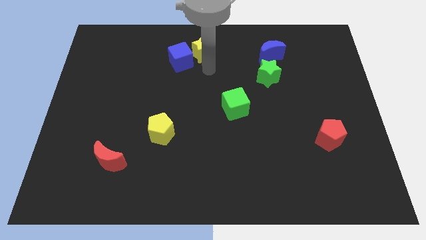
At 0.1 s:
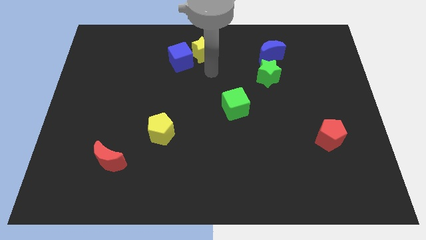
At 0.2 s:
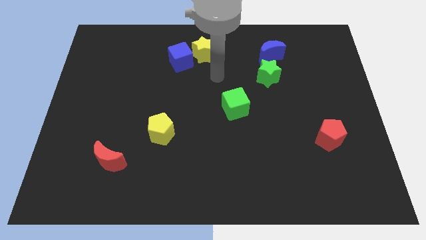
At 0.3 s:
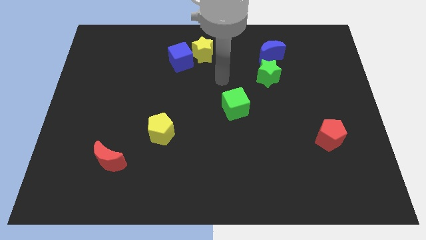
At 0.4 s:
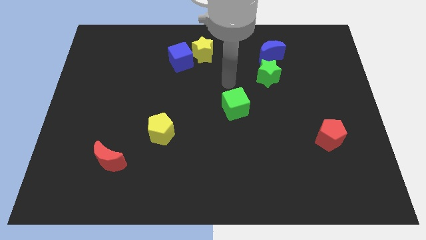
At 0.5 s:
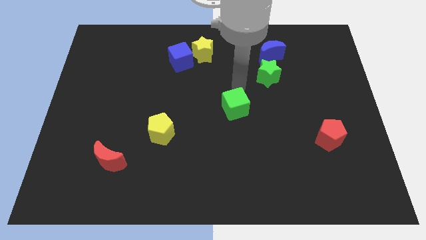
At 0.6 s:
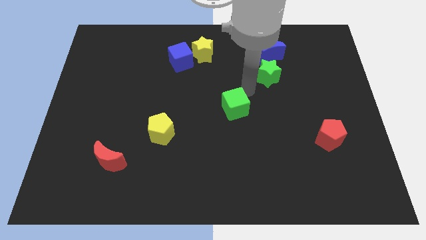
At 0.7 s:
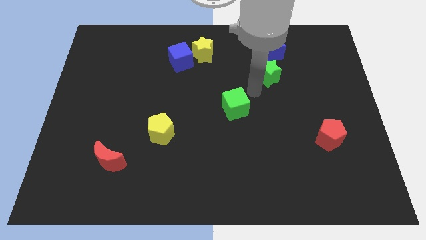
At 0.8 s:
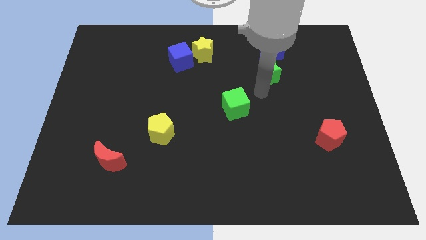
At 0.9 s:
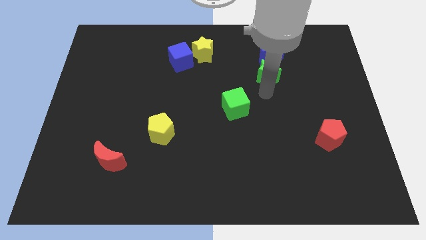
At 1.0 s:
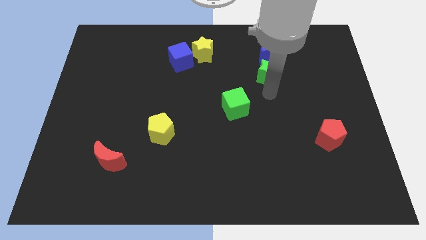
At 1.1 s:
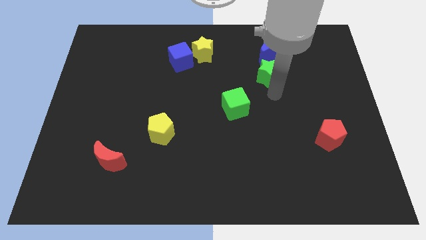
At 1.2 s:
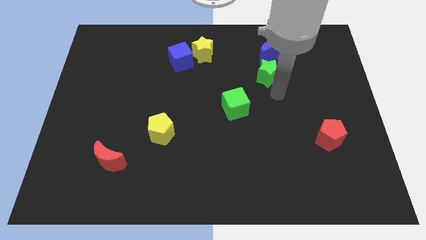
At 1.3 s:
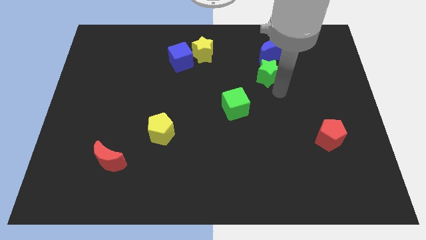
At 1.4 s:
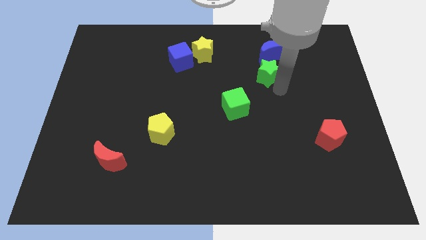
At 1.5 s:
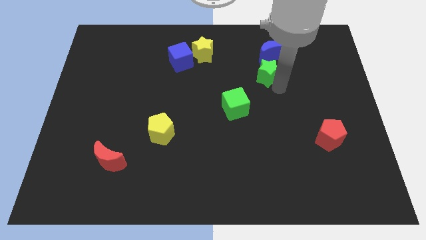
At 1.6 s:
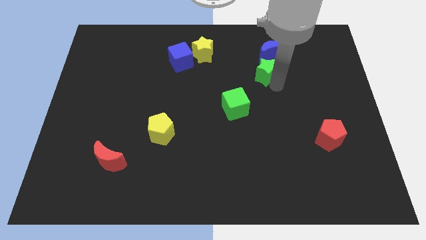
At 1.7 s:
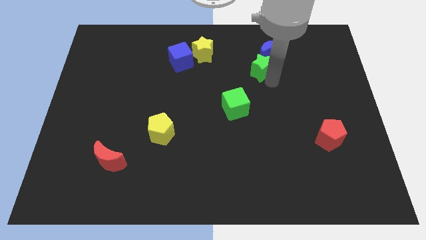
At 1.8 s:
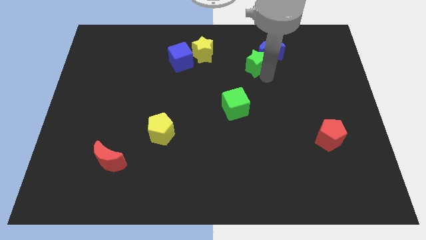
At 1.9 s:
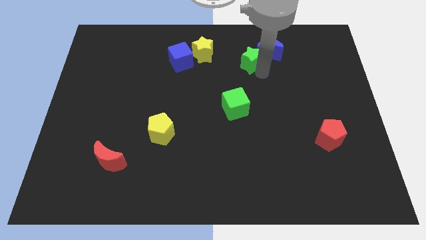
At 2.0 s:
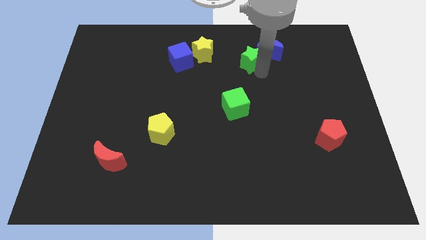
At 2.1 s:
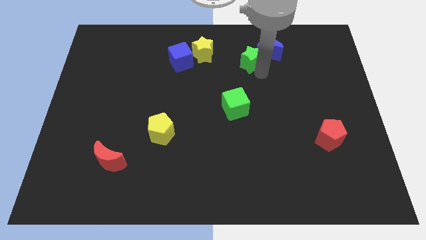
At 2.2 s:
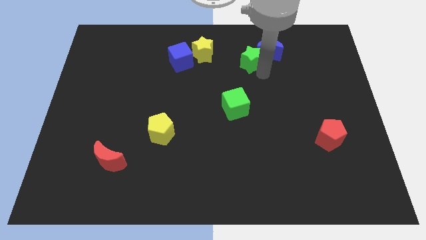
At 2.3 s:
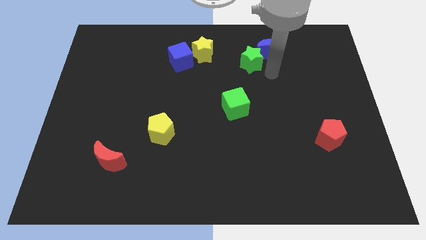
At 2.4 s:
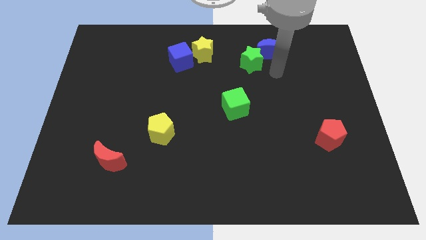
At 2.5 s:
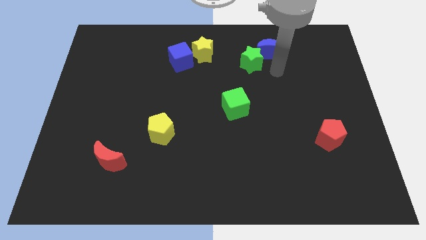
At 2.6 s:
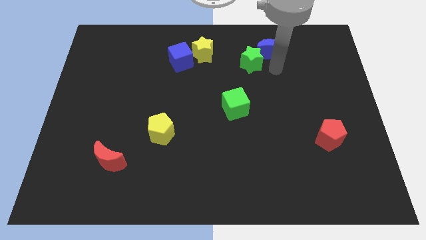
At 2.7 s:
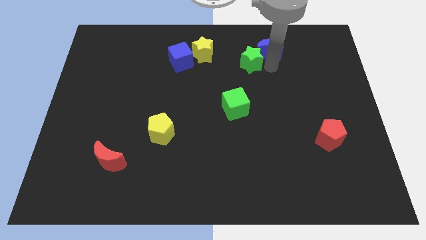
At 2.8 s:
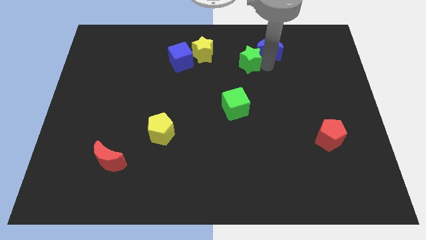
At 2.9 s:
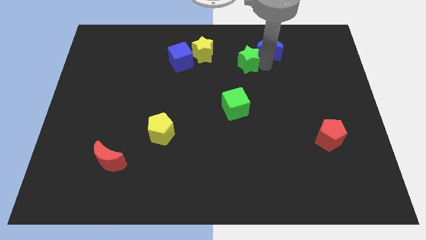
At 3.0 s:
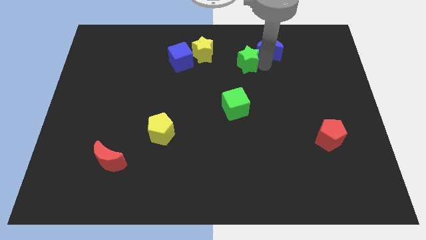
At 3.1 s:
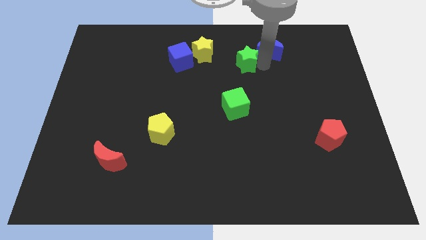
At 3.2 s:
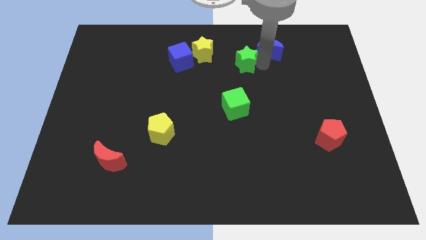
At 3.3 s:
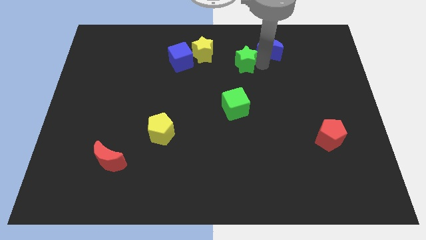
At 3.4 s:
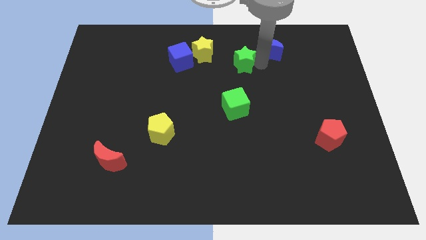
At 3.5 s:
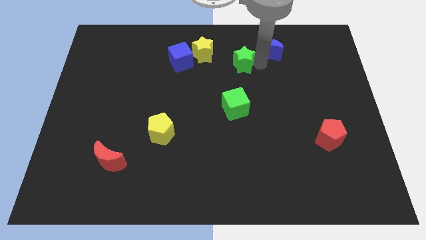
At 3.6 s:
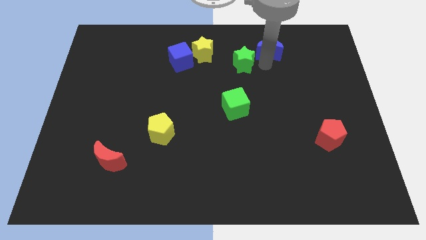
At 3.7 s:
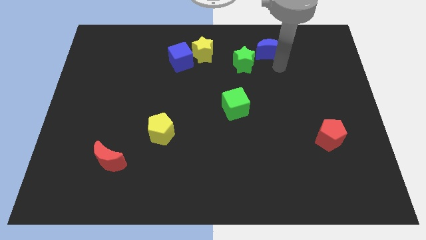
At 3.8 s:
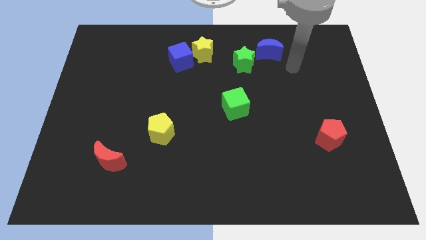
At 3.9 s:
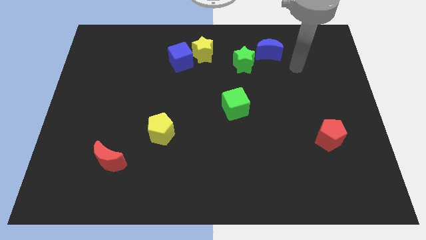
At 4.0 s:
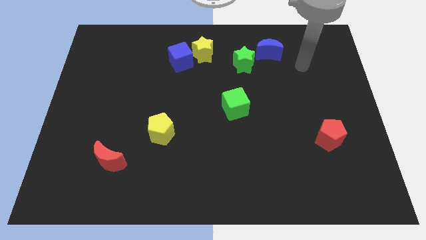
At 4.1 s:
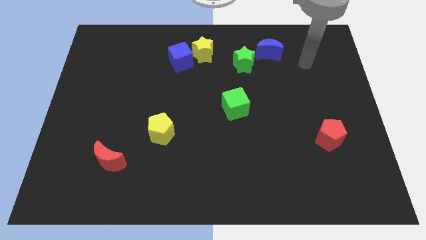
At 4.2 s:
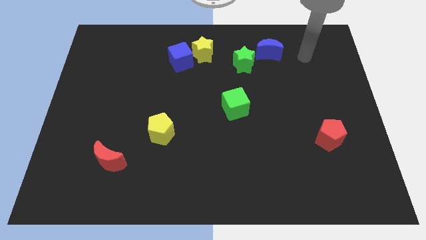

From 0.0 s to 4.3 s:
move the green star to the left of the board

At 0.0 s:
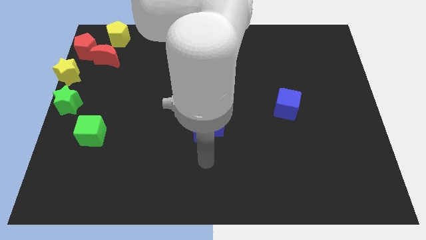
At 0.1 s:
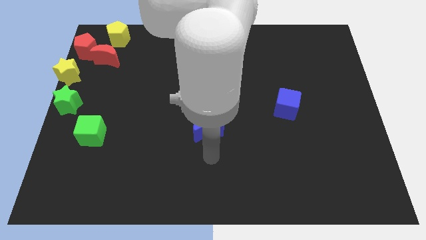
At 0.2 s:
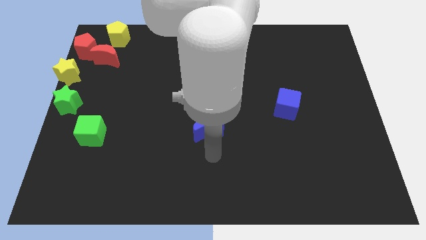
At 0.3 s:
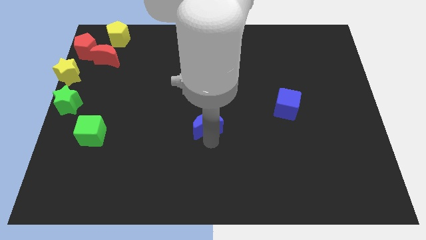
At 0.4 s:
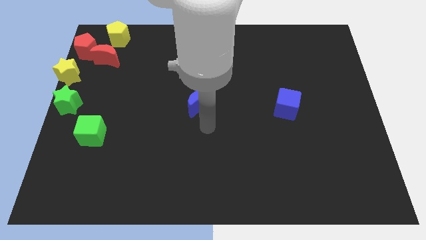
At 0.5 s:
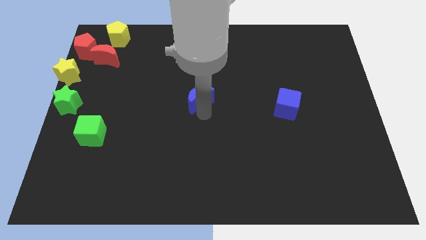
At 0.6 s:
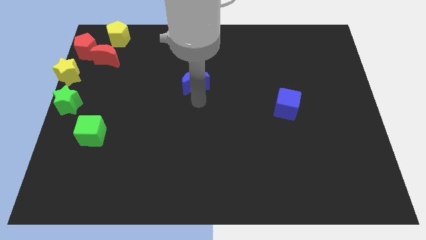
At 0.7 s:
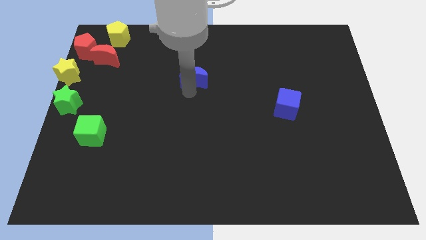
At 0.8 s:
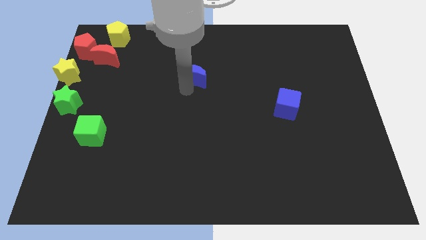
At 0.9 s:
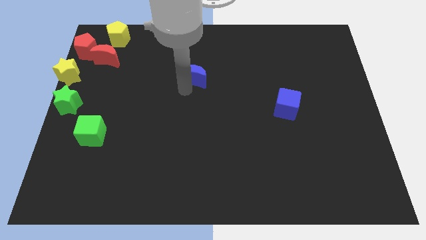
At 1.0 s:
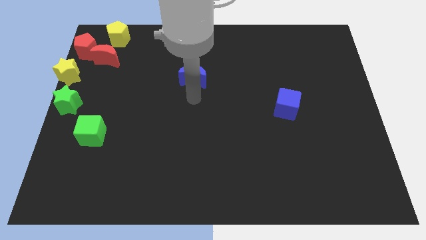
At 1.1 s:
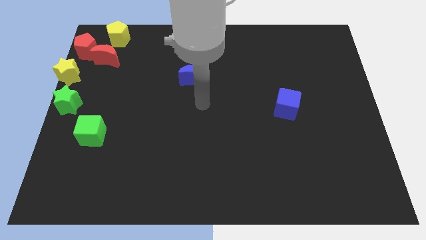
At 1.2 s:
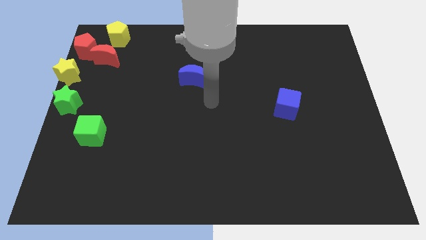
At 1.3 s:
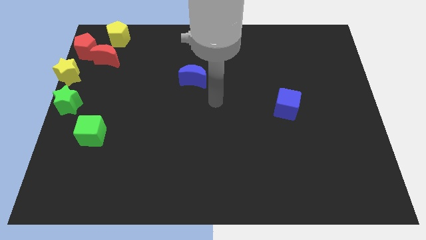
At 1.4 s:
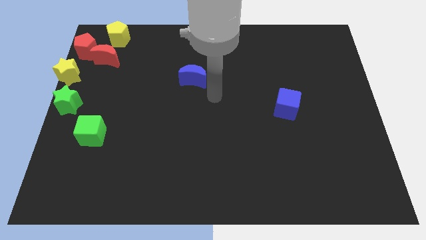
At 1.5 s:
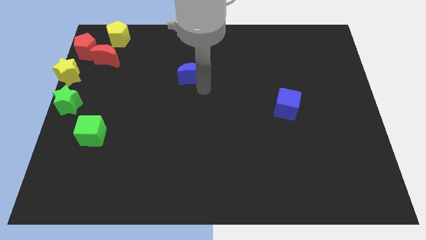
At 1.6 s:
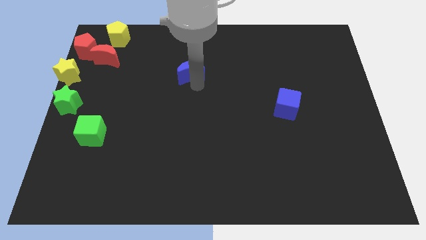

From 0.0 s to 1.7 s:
push the blue crescent towards the top center side of the board

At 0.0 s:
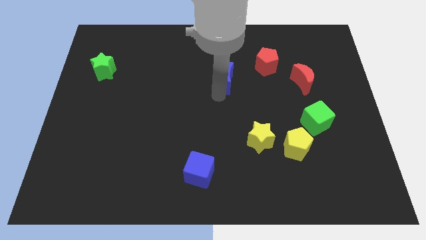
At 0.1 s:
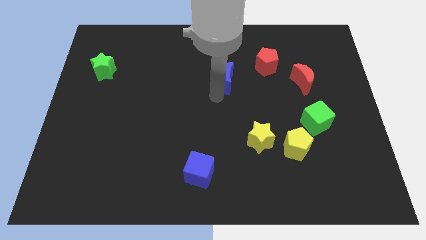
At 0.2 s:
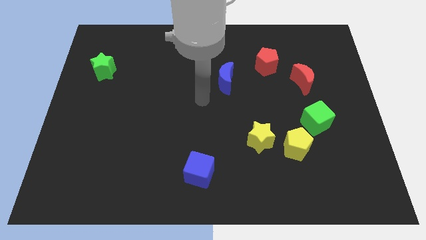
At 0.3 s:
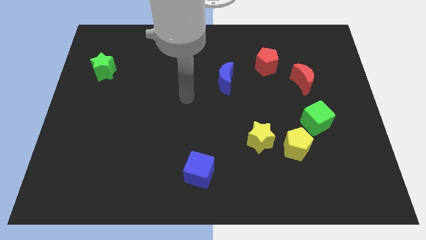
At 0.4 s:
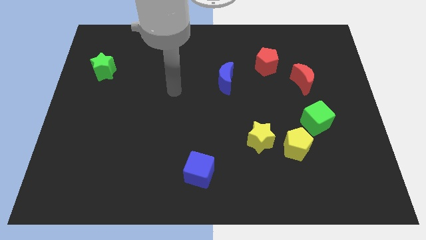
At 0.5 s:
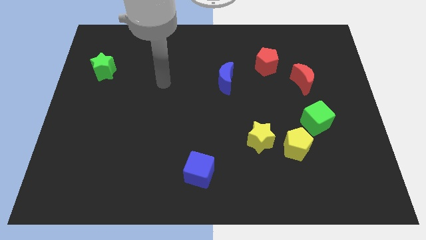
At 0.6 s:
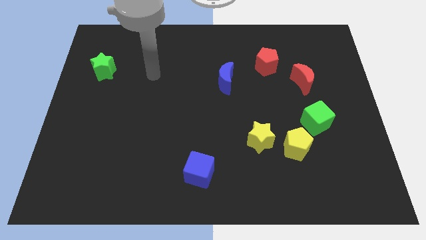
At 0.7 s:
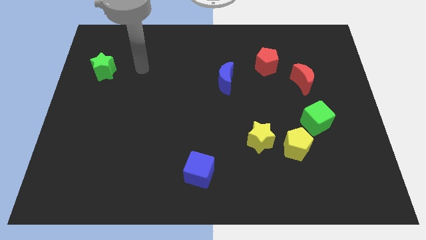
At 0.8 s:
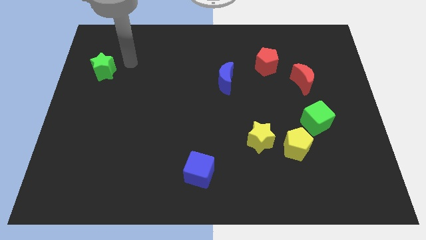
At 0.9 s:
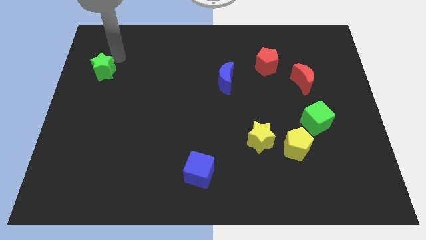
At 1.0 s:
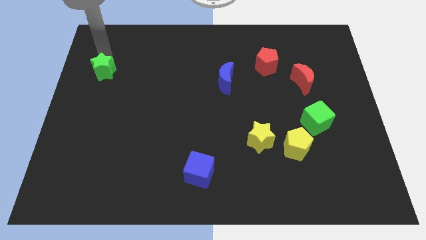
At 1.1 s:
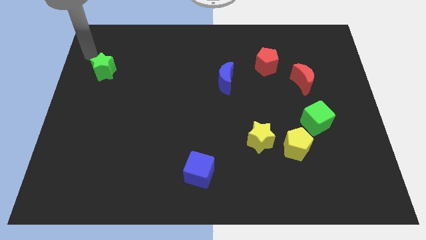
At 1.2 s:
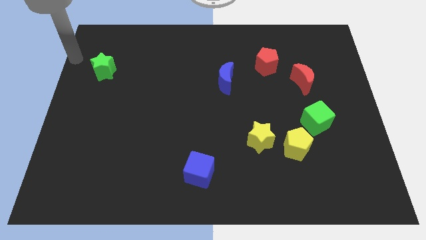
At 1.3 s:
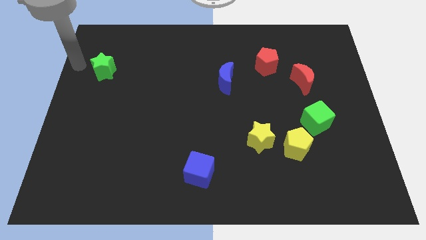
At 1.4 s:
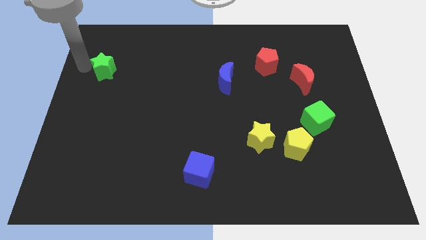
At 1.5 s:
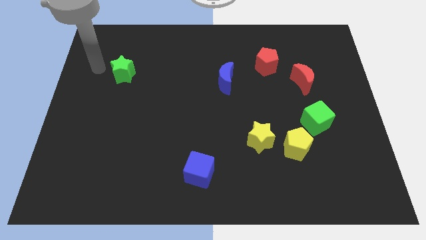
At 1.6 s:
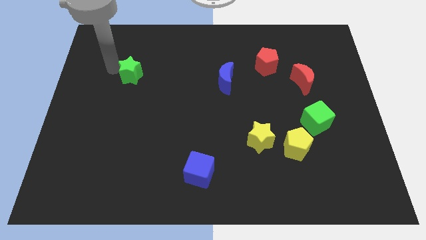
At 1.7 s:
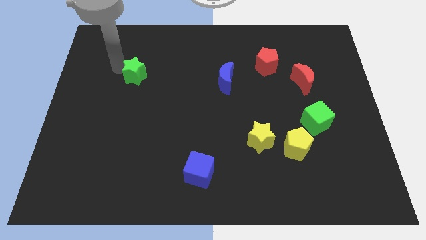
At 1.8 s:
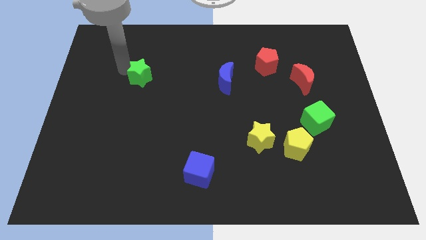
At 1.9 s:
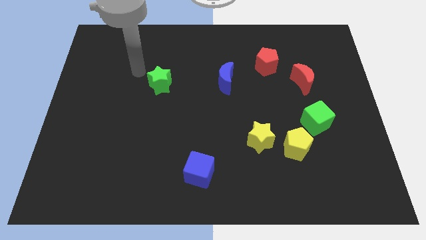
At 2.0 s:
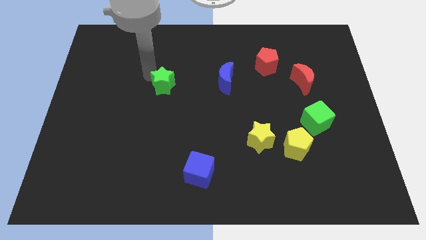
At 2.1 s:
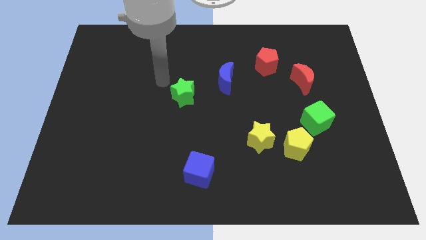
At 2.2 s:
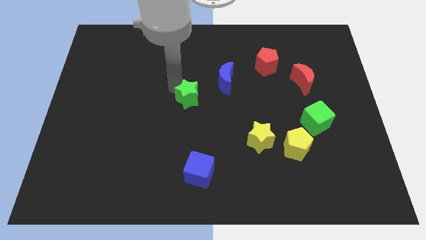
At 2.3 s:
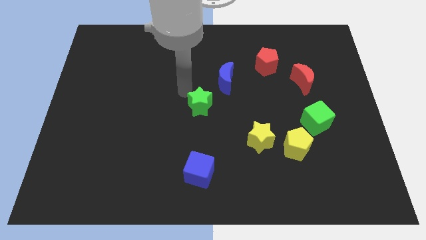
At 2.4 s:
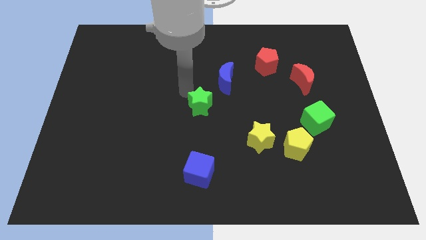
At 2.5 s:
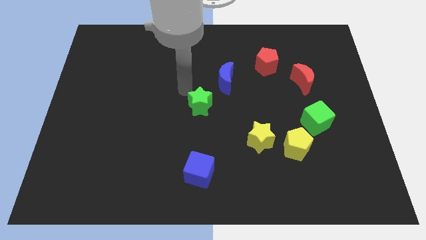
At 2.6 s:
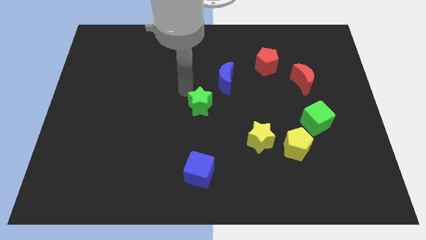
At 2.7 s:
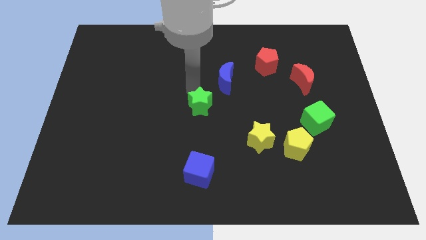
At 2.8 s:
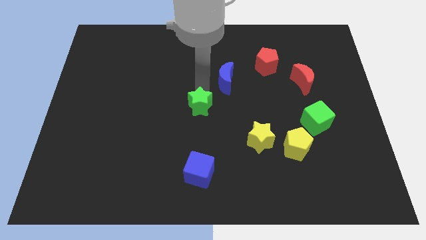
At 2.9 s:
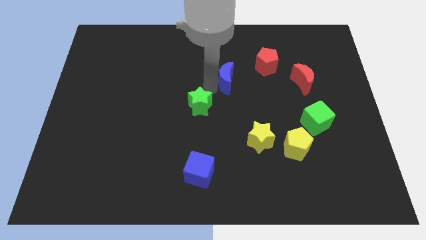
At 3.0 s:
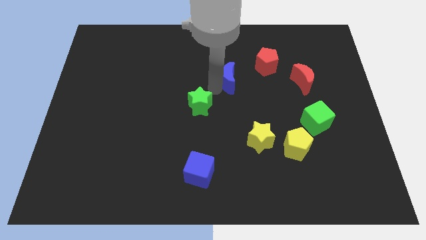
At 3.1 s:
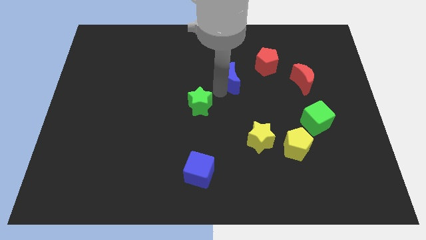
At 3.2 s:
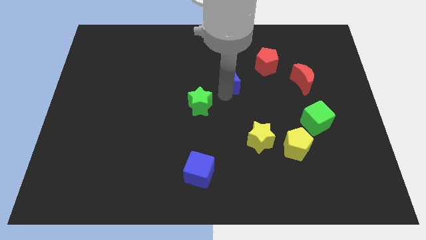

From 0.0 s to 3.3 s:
place the green star at the center of the board
